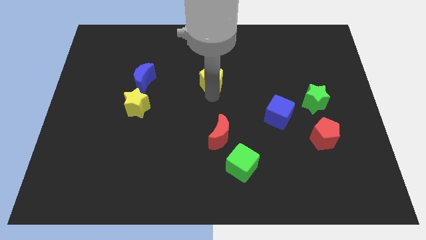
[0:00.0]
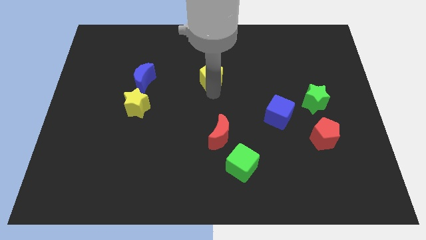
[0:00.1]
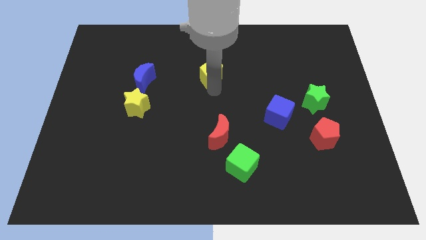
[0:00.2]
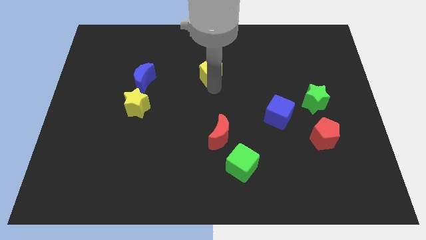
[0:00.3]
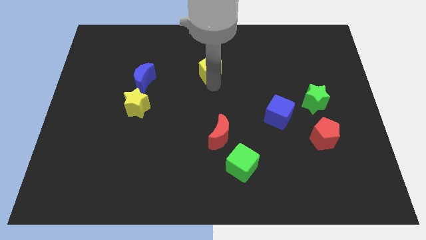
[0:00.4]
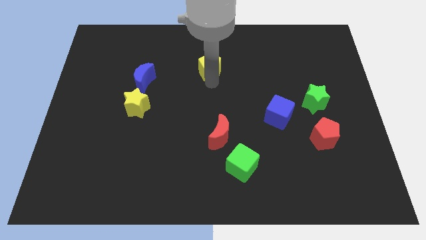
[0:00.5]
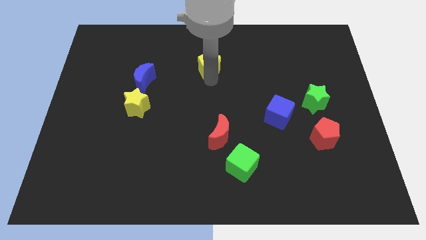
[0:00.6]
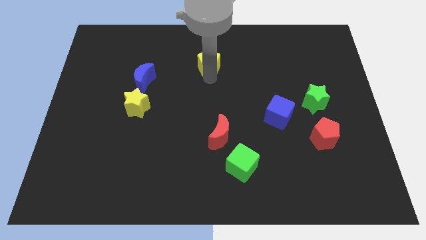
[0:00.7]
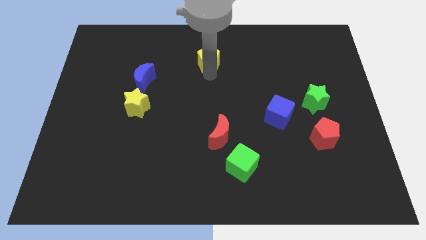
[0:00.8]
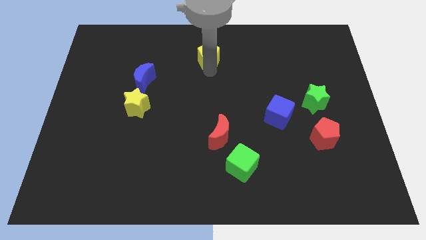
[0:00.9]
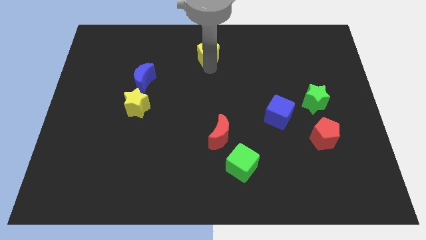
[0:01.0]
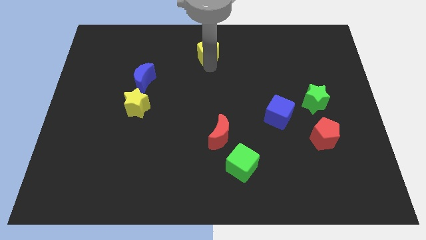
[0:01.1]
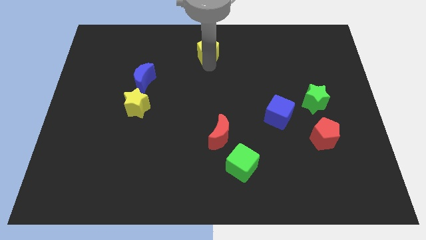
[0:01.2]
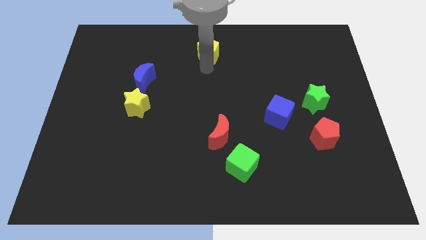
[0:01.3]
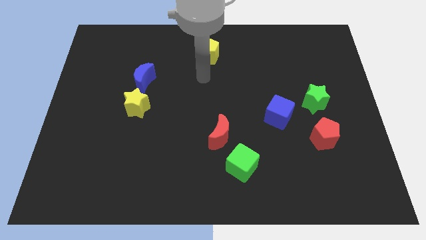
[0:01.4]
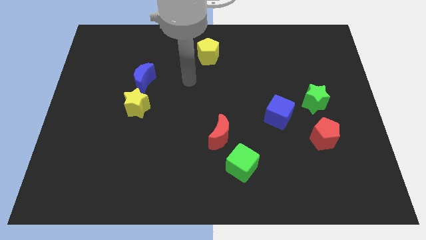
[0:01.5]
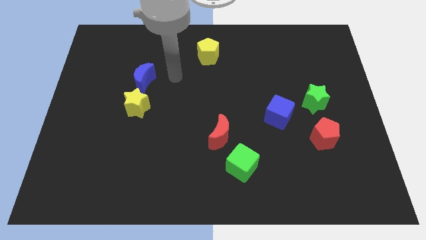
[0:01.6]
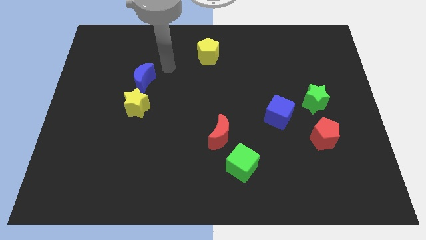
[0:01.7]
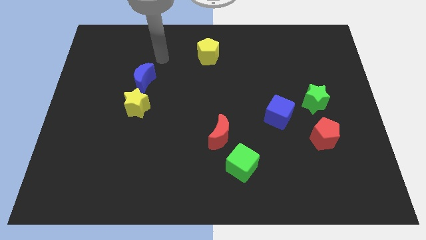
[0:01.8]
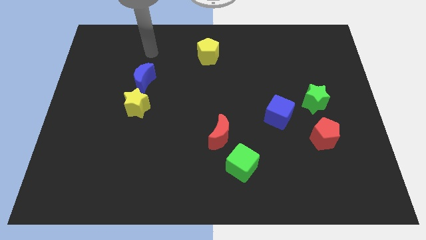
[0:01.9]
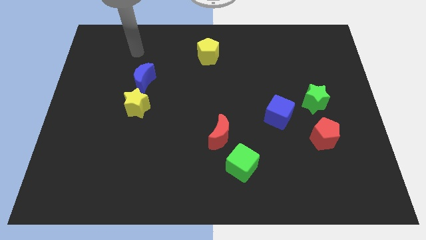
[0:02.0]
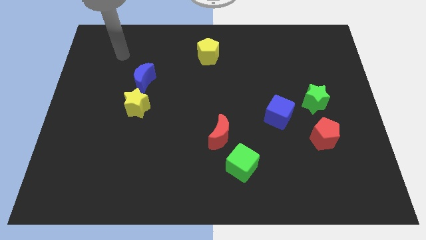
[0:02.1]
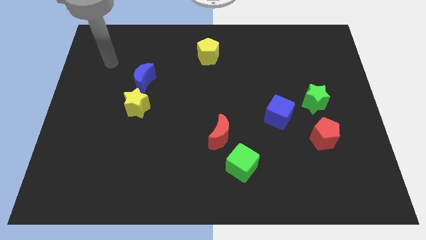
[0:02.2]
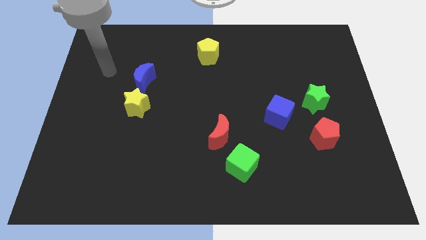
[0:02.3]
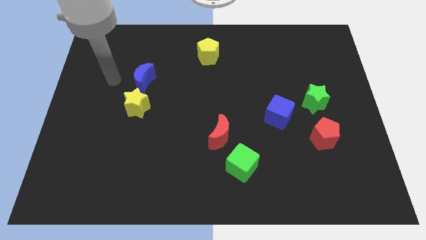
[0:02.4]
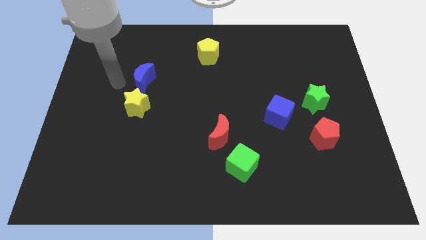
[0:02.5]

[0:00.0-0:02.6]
move the yellow pentagon towards top center of the board

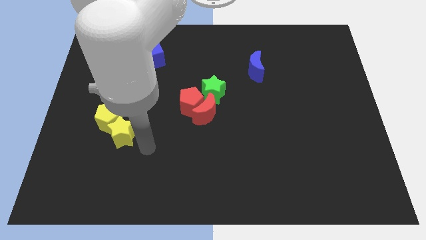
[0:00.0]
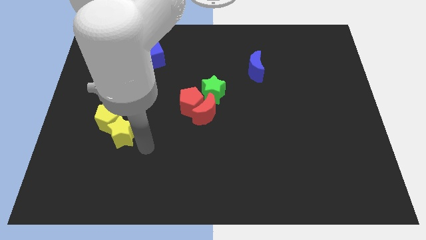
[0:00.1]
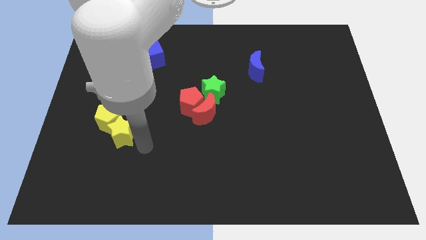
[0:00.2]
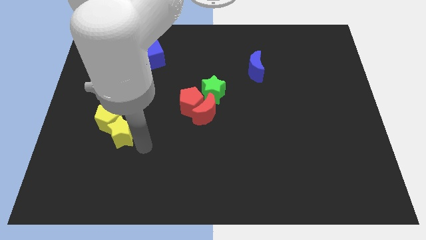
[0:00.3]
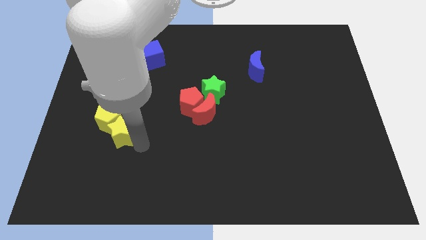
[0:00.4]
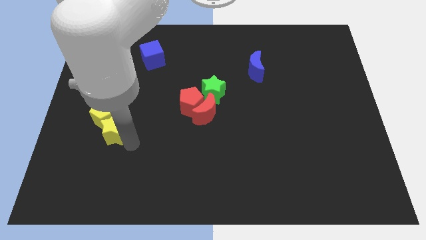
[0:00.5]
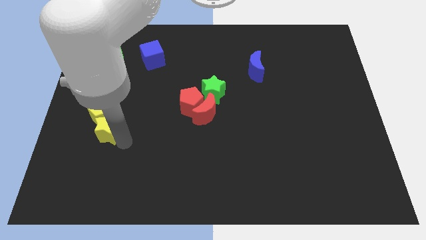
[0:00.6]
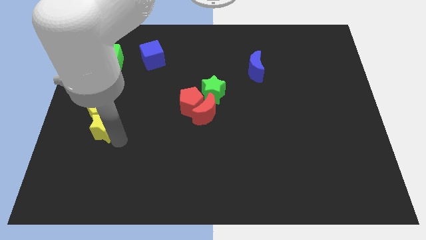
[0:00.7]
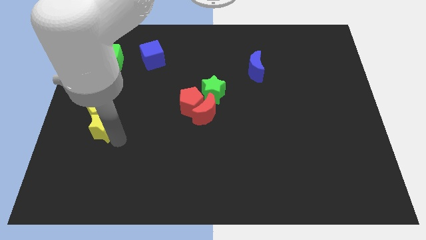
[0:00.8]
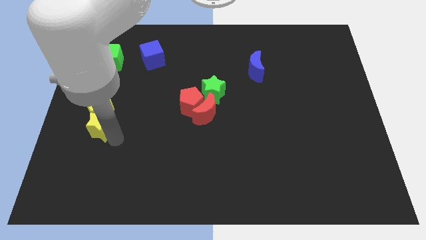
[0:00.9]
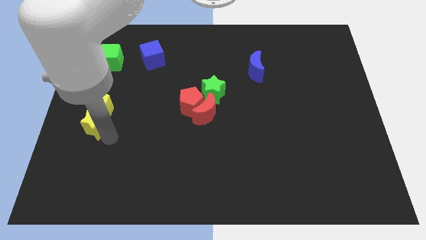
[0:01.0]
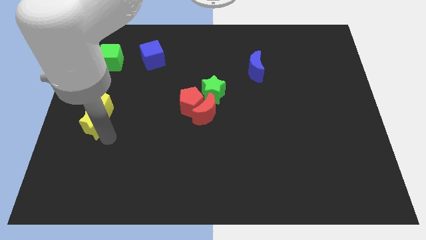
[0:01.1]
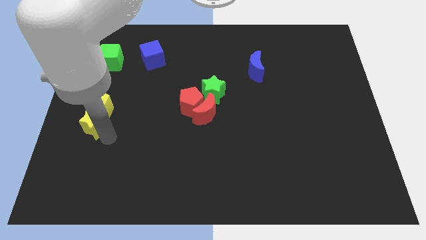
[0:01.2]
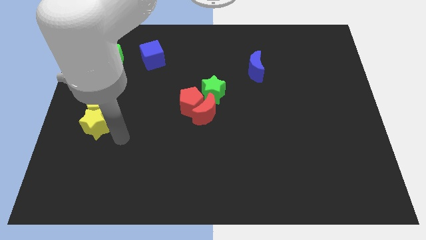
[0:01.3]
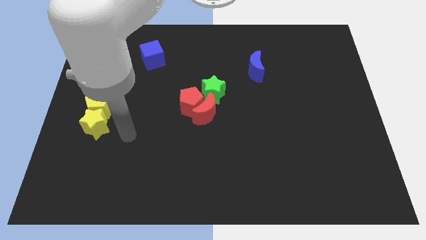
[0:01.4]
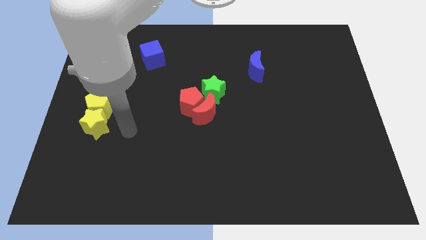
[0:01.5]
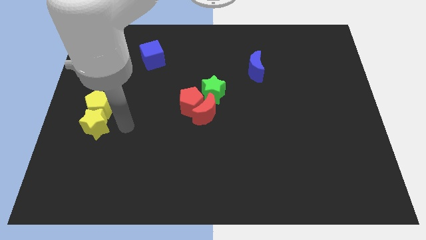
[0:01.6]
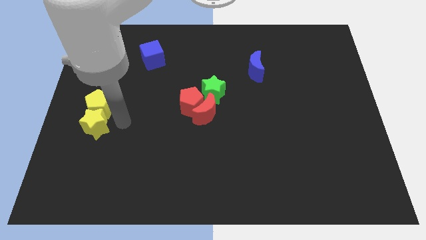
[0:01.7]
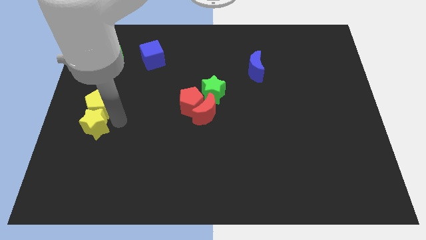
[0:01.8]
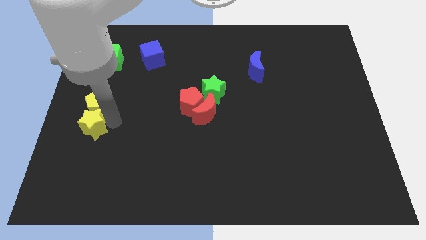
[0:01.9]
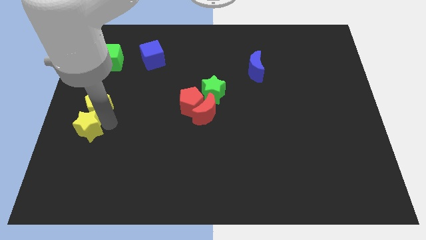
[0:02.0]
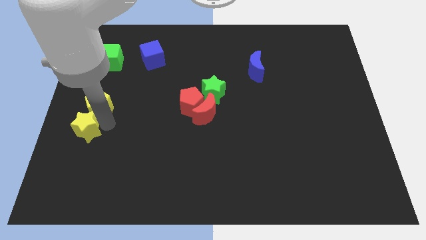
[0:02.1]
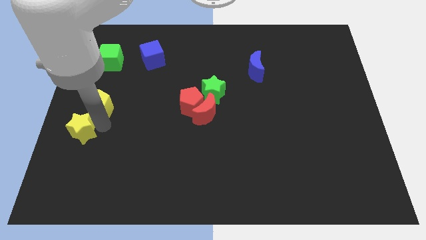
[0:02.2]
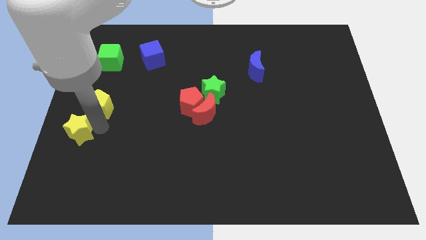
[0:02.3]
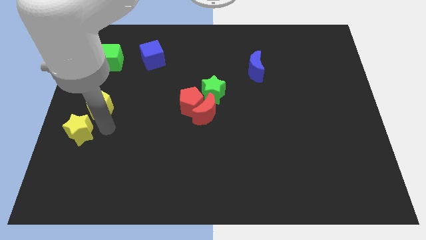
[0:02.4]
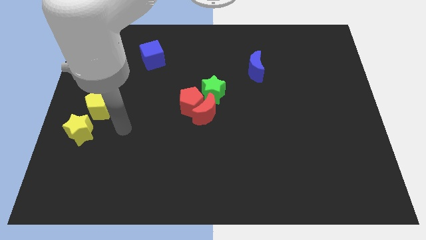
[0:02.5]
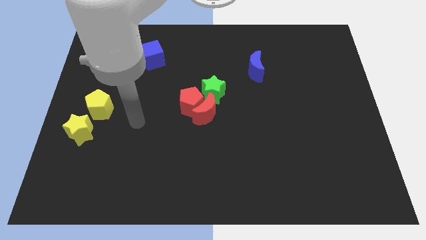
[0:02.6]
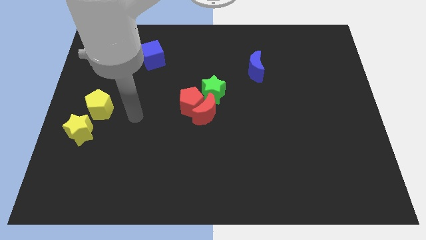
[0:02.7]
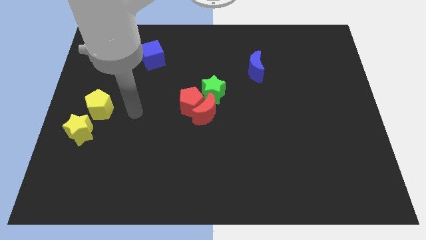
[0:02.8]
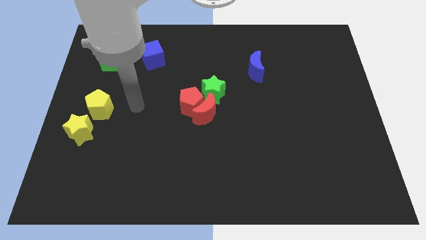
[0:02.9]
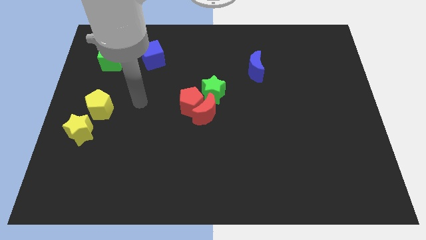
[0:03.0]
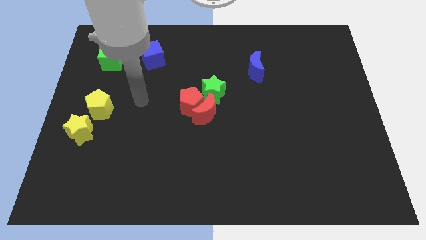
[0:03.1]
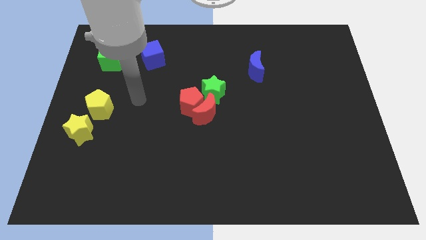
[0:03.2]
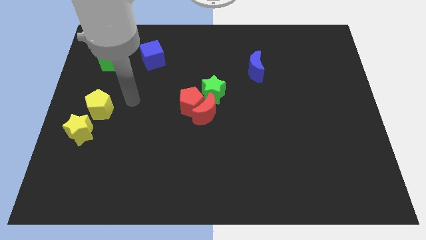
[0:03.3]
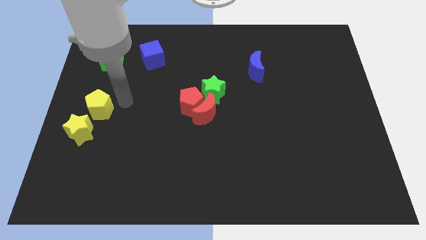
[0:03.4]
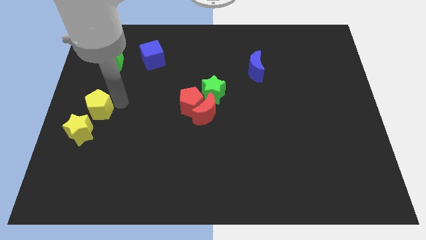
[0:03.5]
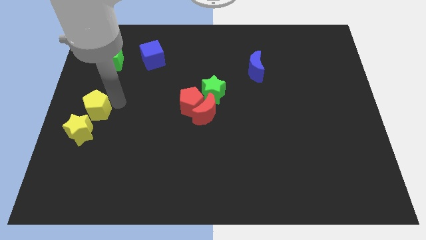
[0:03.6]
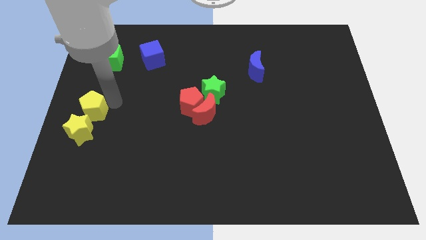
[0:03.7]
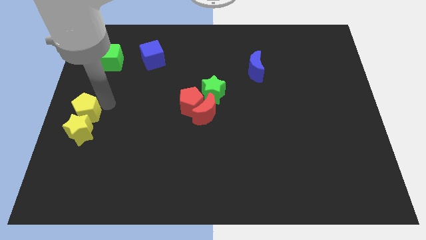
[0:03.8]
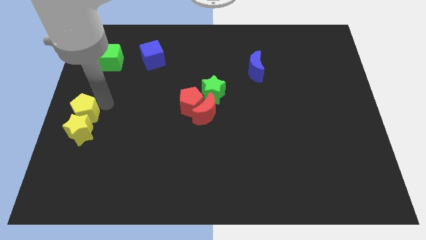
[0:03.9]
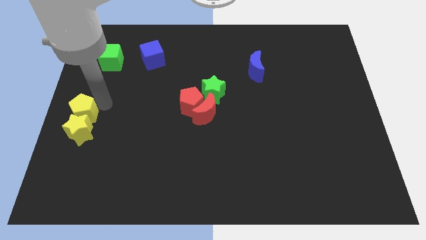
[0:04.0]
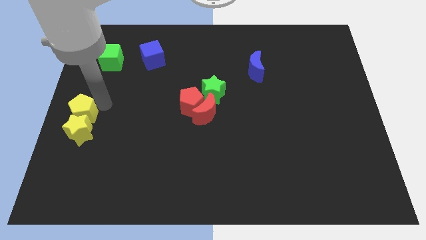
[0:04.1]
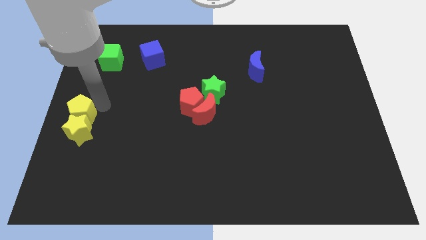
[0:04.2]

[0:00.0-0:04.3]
place the yellow star to the bottom side of the yellow pentagon

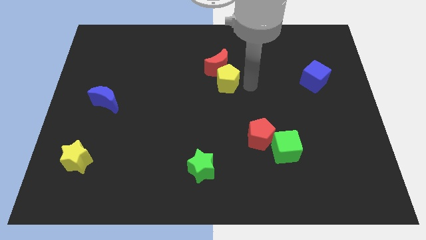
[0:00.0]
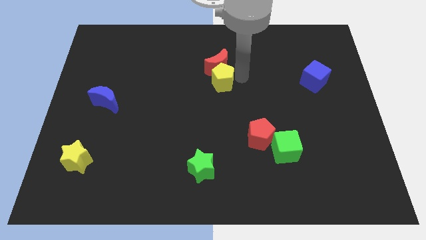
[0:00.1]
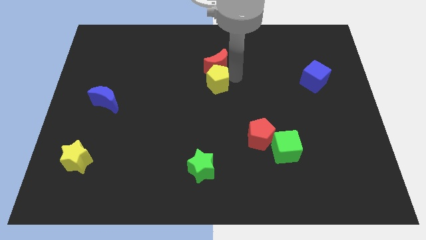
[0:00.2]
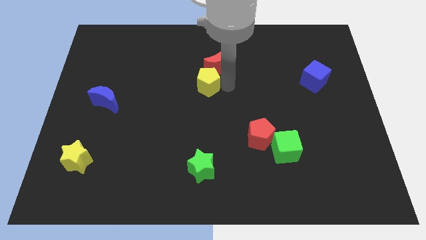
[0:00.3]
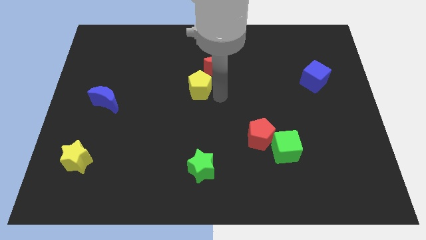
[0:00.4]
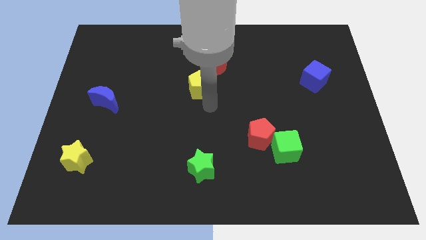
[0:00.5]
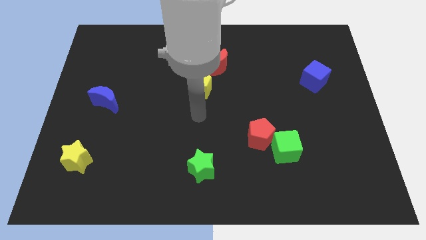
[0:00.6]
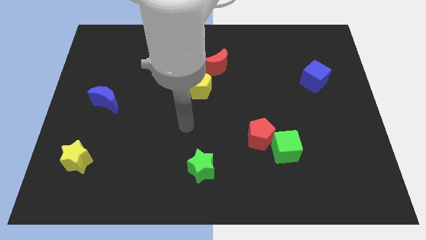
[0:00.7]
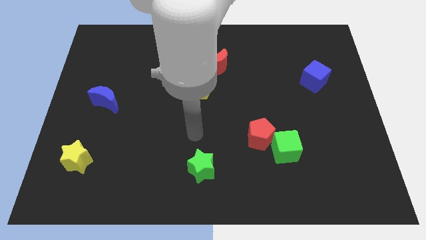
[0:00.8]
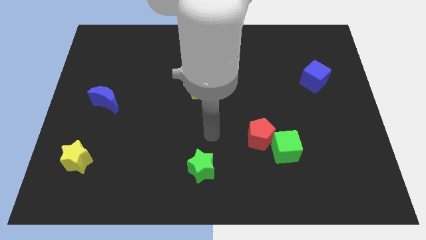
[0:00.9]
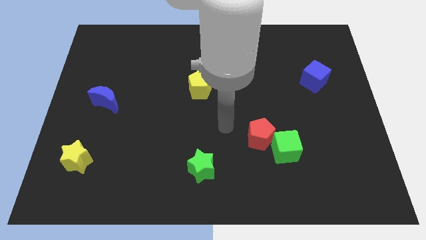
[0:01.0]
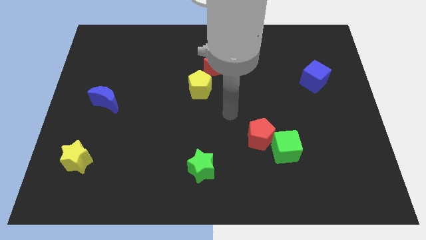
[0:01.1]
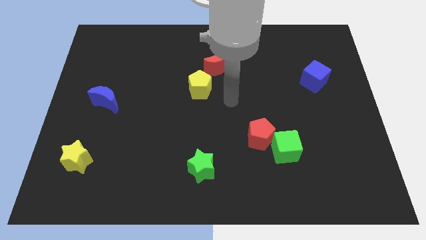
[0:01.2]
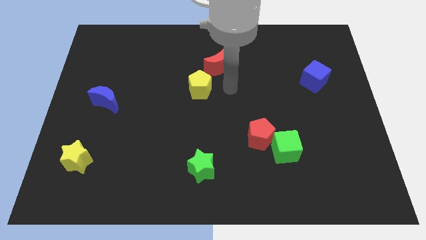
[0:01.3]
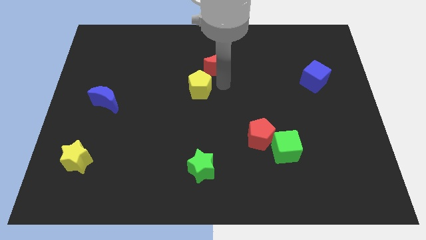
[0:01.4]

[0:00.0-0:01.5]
move the yellow pentagon to the left bottom of the red moon

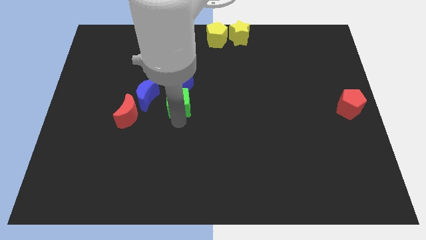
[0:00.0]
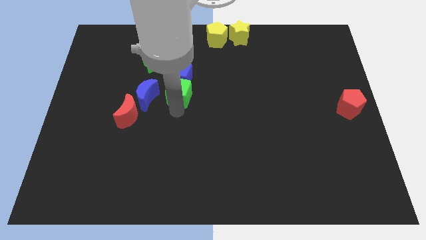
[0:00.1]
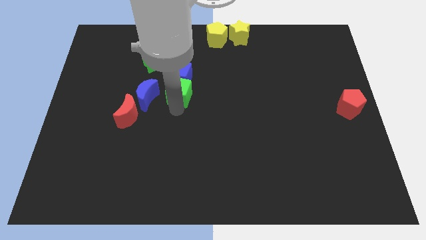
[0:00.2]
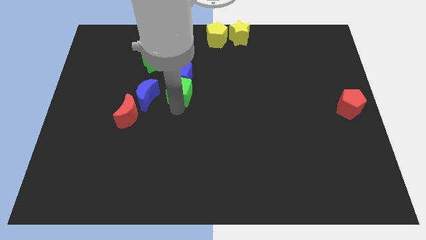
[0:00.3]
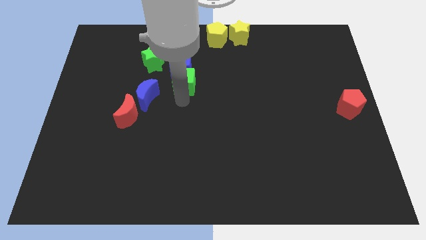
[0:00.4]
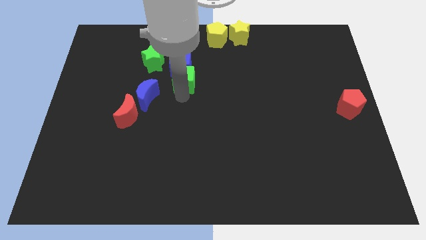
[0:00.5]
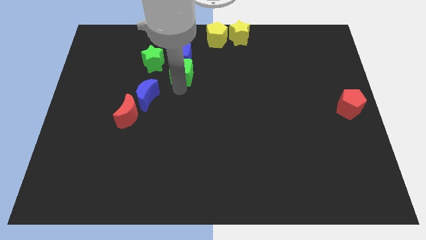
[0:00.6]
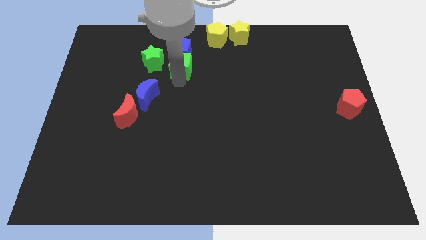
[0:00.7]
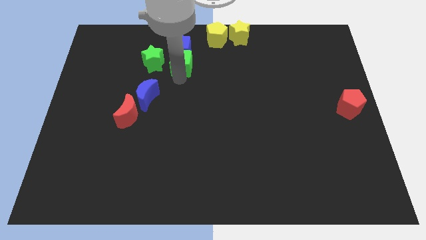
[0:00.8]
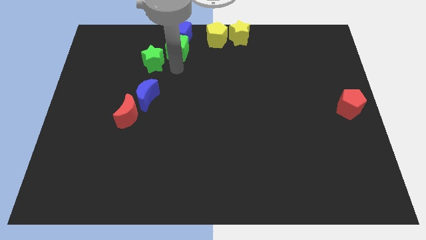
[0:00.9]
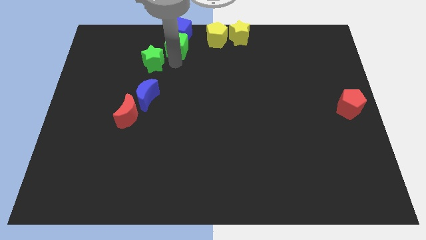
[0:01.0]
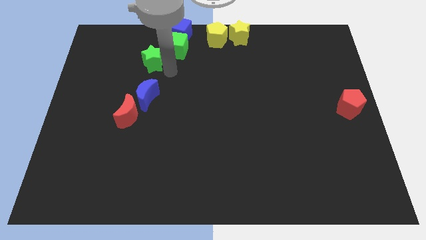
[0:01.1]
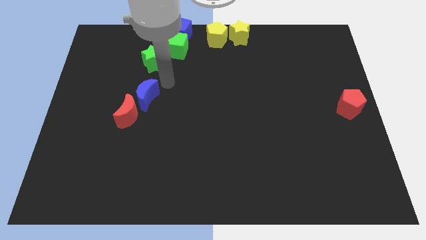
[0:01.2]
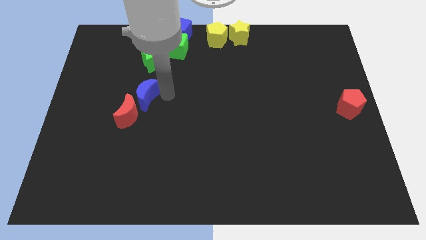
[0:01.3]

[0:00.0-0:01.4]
move the green cube and blue cube towards the top center of the board
